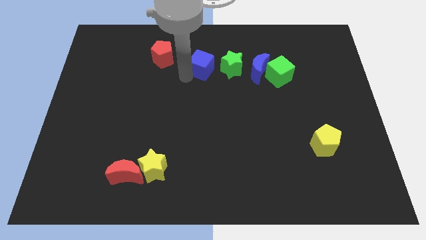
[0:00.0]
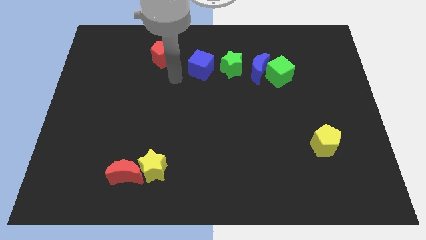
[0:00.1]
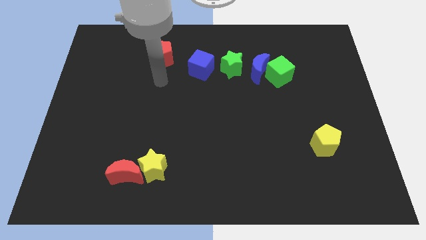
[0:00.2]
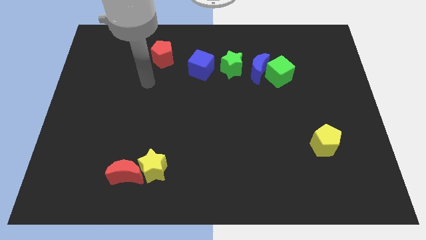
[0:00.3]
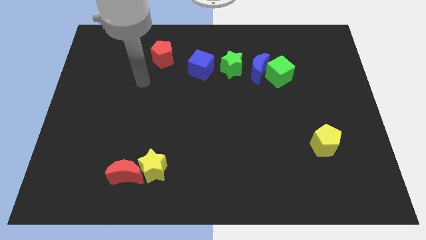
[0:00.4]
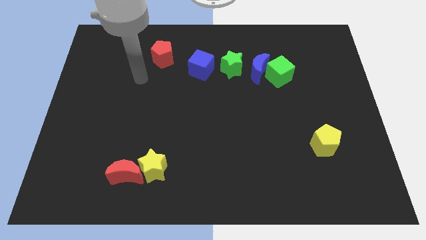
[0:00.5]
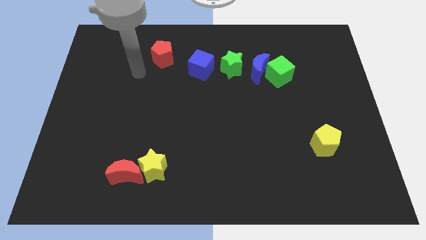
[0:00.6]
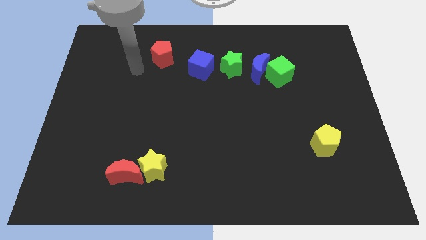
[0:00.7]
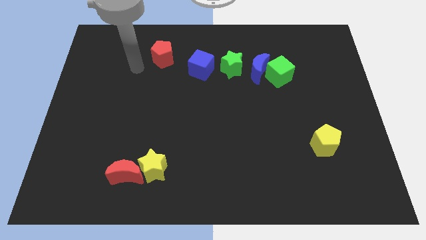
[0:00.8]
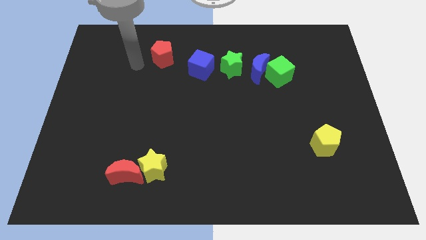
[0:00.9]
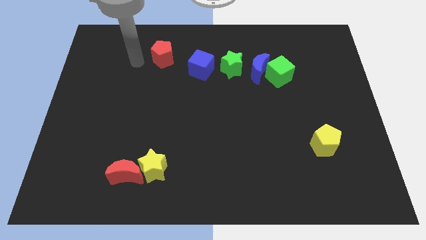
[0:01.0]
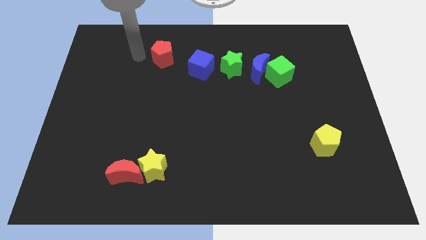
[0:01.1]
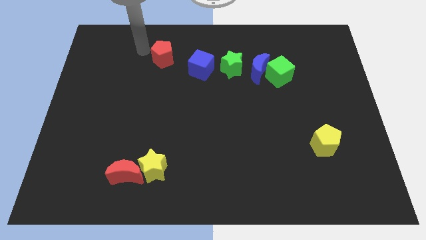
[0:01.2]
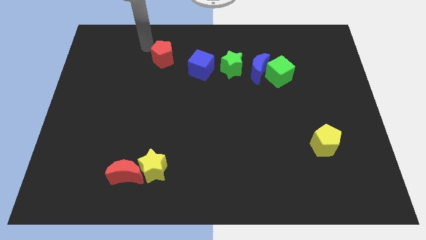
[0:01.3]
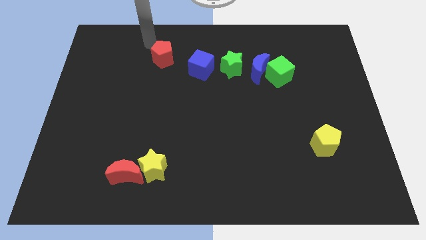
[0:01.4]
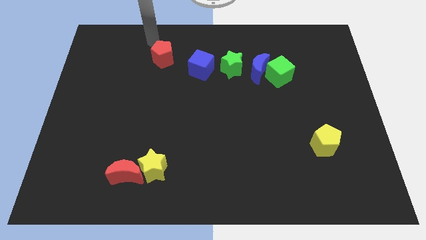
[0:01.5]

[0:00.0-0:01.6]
move your arm away from the blue cube

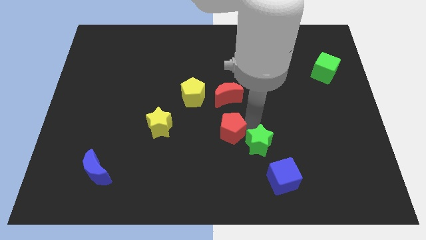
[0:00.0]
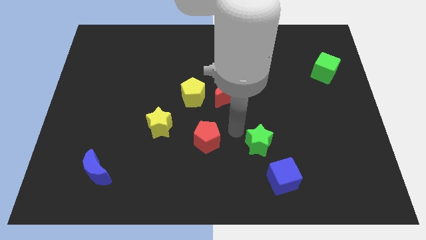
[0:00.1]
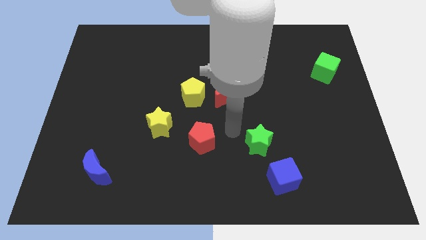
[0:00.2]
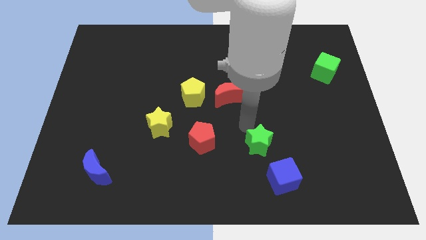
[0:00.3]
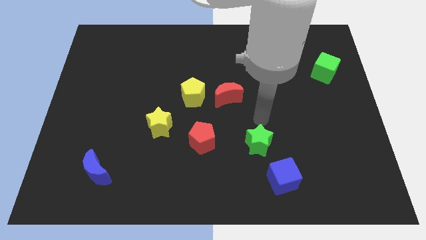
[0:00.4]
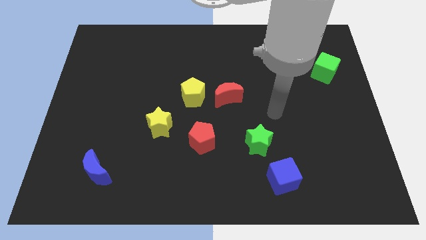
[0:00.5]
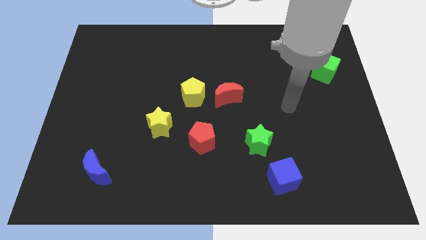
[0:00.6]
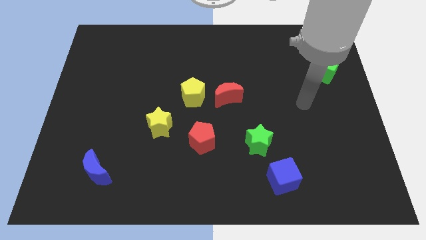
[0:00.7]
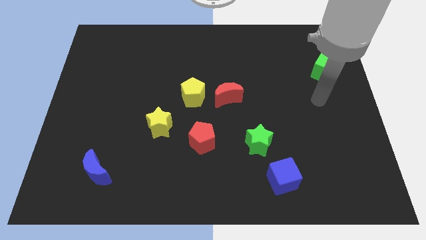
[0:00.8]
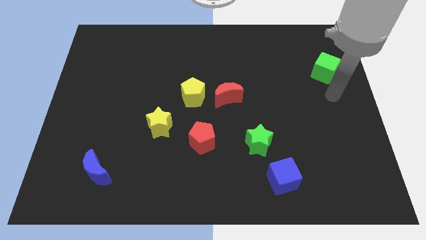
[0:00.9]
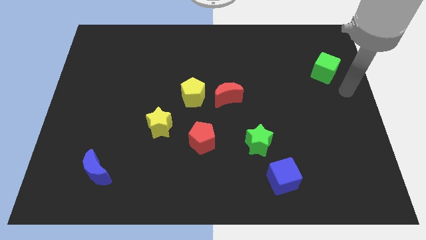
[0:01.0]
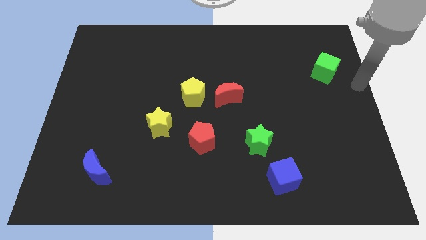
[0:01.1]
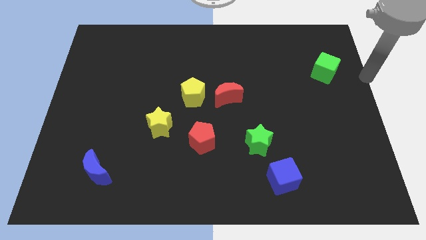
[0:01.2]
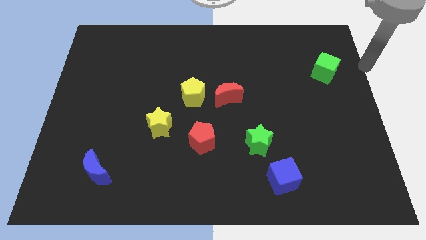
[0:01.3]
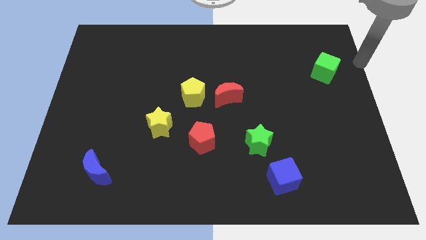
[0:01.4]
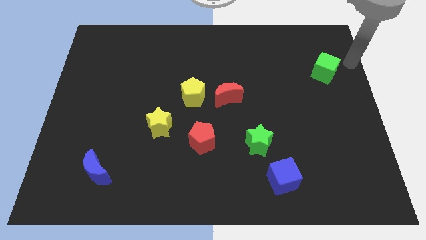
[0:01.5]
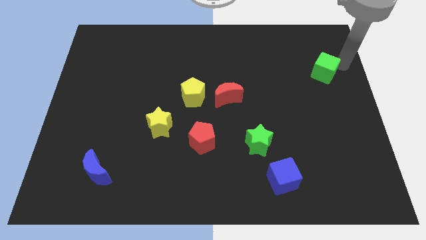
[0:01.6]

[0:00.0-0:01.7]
slide the red pentagon to the left side of the green star

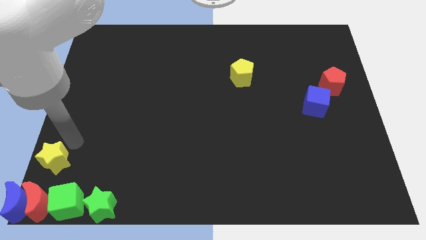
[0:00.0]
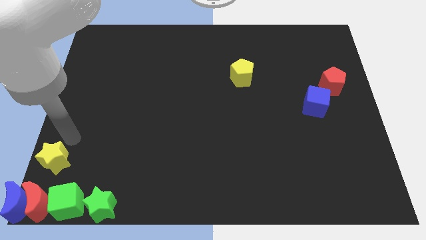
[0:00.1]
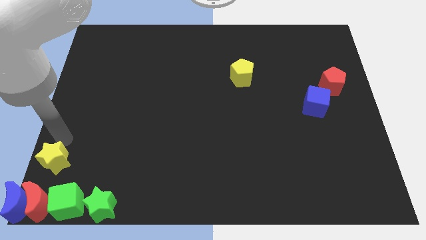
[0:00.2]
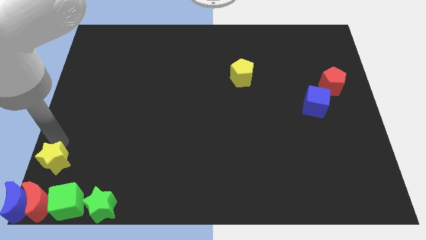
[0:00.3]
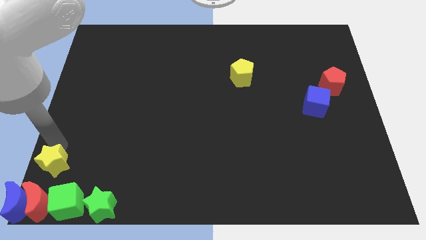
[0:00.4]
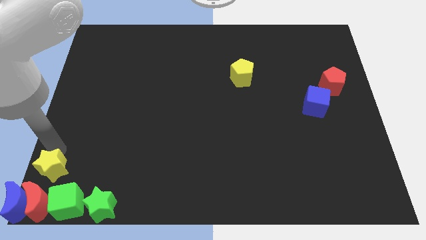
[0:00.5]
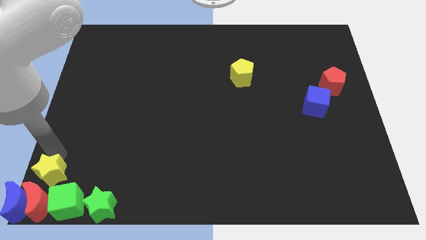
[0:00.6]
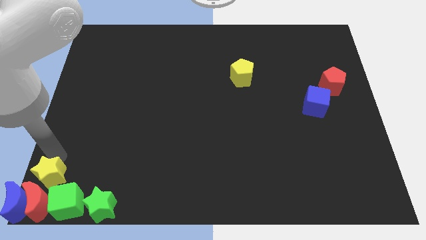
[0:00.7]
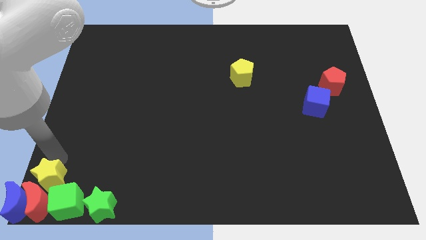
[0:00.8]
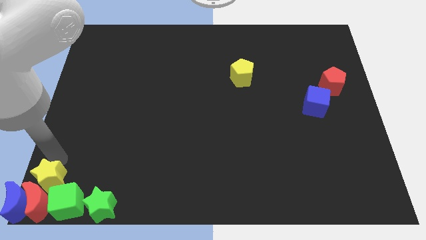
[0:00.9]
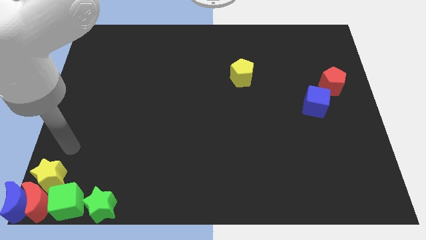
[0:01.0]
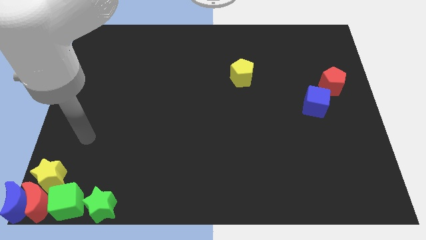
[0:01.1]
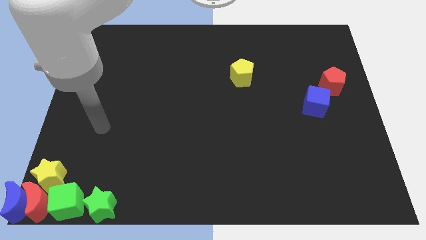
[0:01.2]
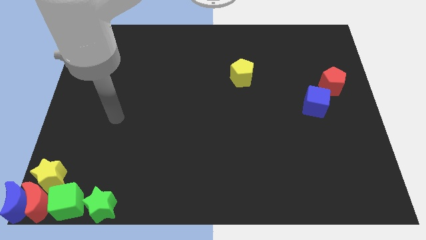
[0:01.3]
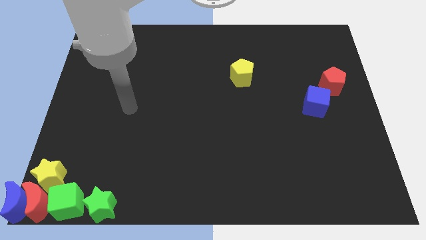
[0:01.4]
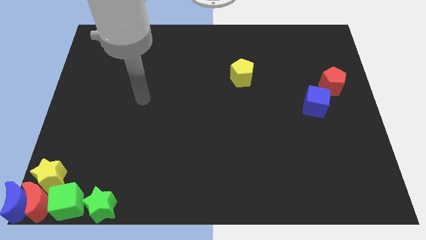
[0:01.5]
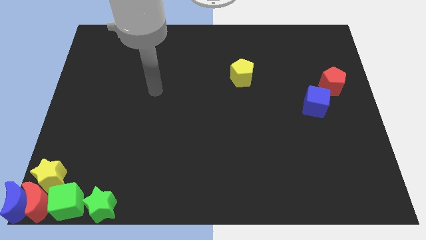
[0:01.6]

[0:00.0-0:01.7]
push the yellow star to the bottom left corner

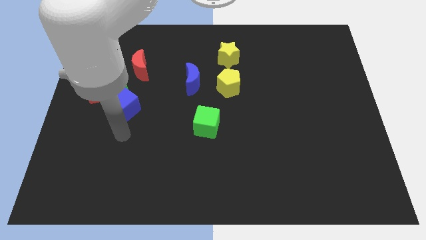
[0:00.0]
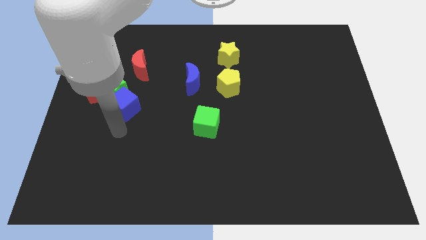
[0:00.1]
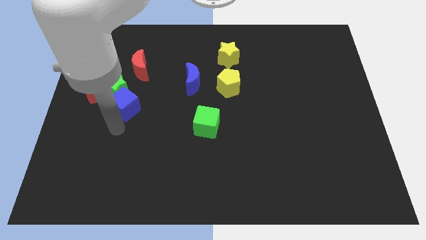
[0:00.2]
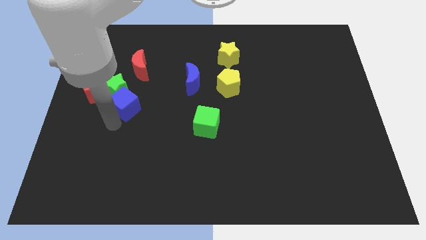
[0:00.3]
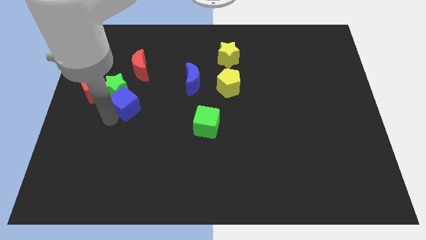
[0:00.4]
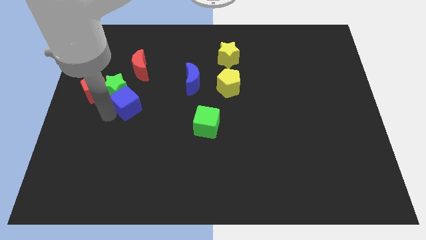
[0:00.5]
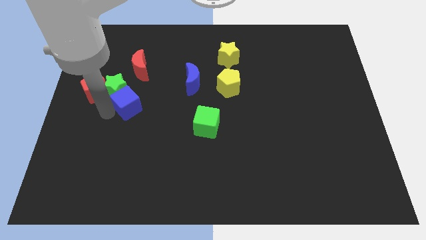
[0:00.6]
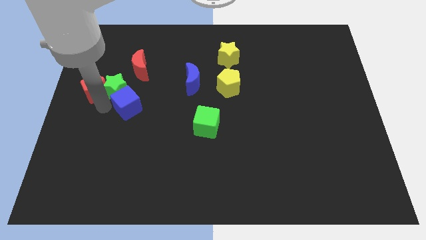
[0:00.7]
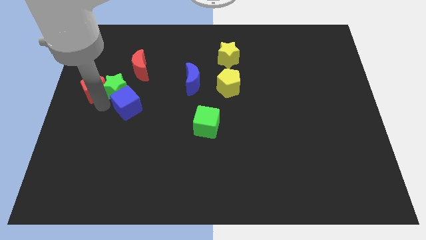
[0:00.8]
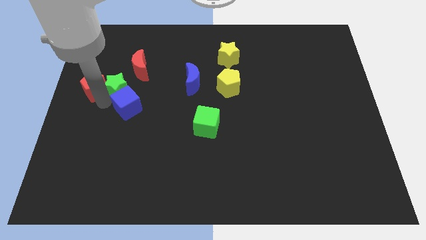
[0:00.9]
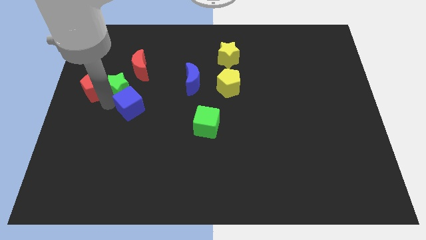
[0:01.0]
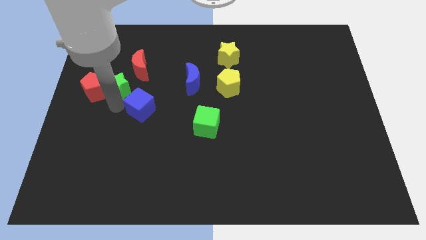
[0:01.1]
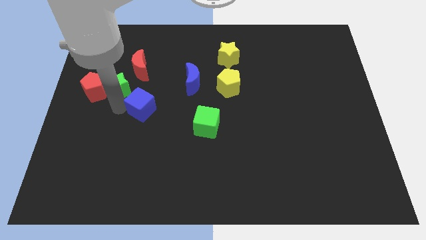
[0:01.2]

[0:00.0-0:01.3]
push blue cube below red crescent

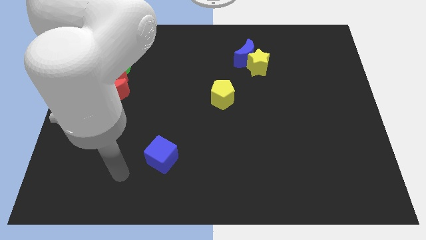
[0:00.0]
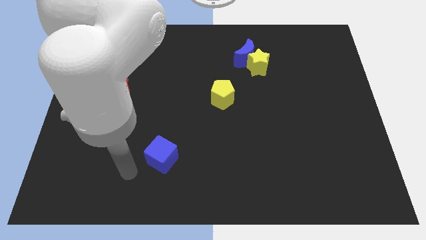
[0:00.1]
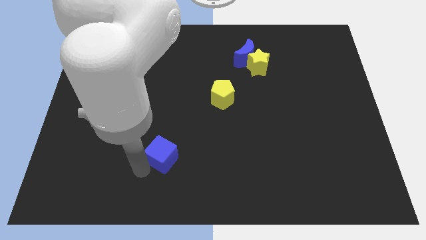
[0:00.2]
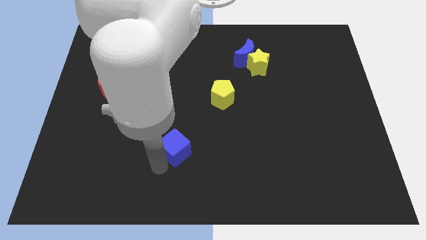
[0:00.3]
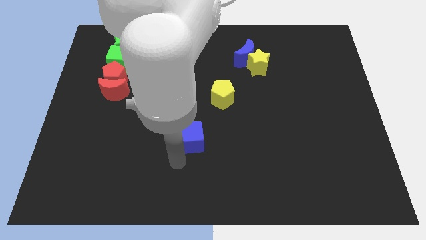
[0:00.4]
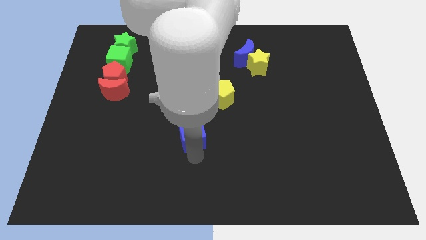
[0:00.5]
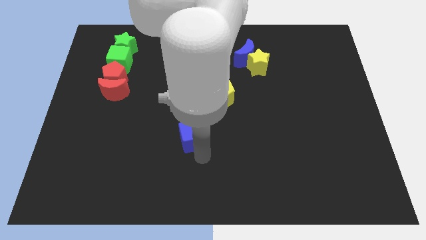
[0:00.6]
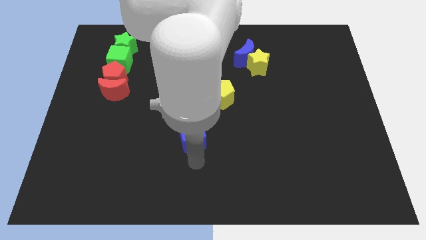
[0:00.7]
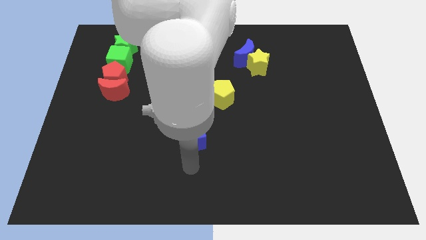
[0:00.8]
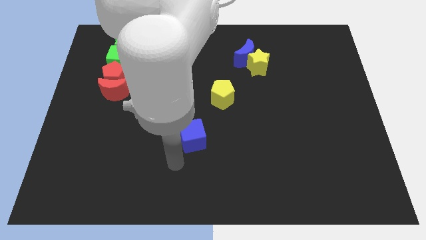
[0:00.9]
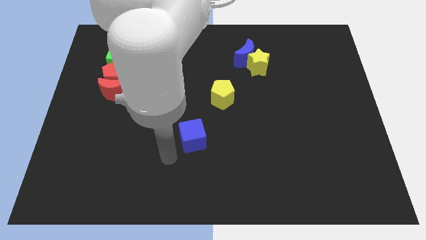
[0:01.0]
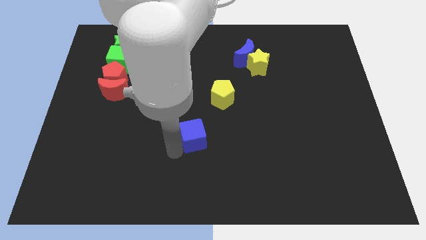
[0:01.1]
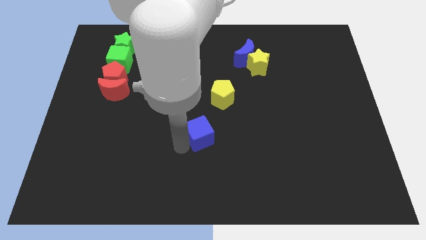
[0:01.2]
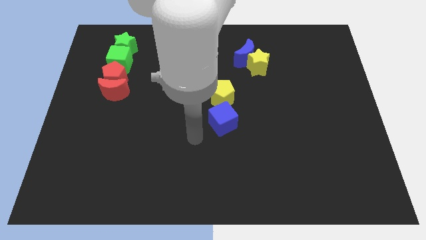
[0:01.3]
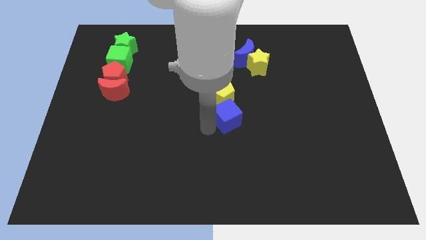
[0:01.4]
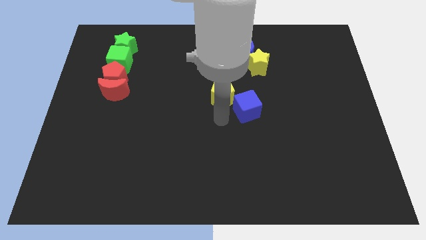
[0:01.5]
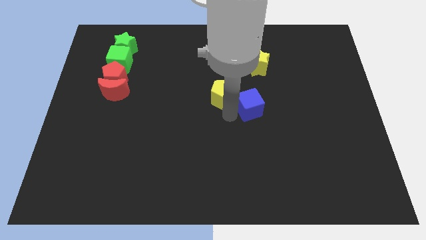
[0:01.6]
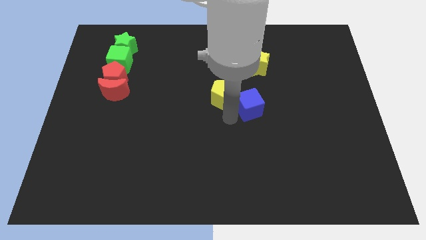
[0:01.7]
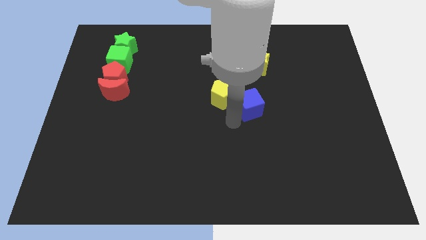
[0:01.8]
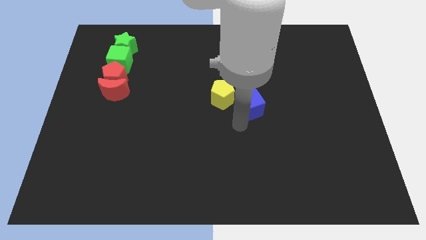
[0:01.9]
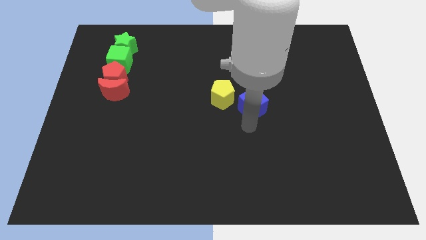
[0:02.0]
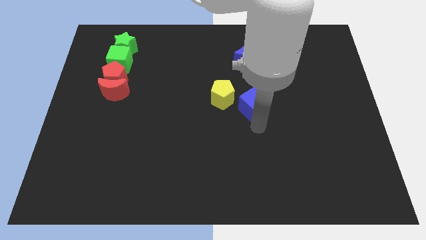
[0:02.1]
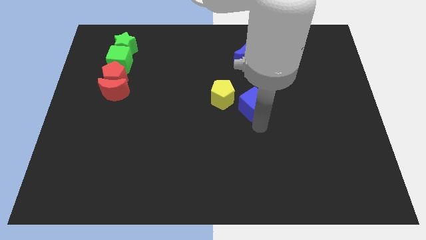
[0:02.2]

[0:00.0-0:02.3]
push the blue cube to the right of the yellow pentagon

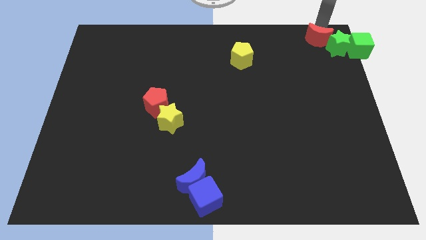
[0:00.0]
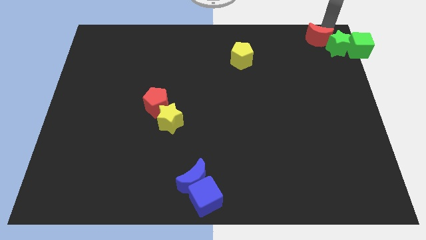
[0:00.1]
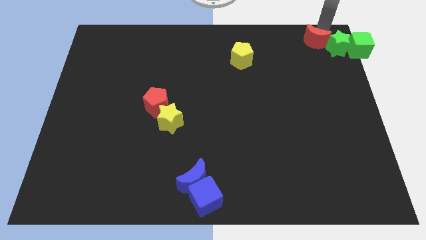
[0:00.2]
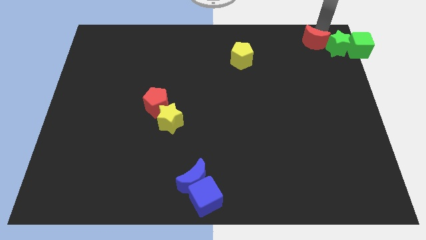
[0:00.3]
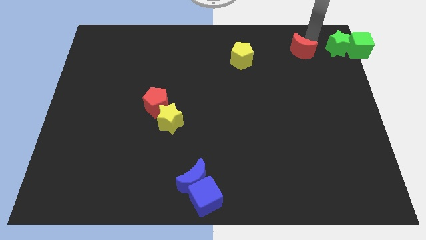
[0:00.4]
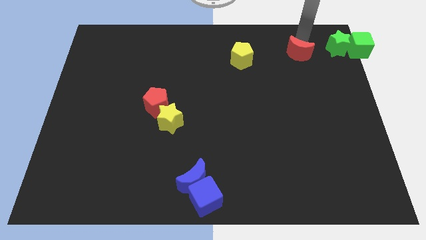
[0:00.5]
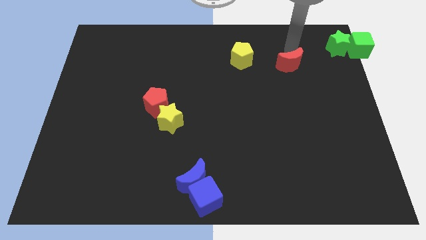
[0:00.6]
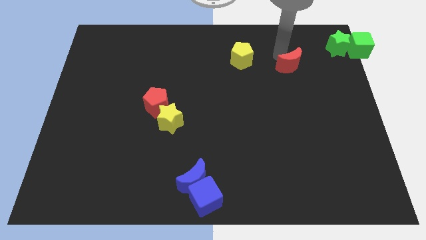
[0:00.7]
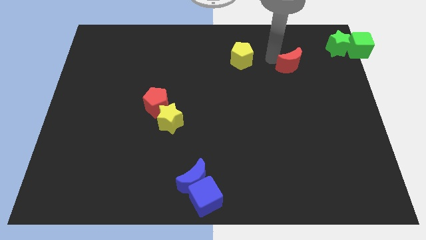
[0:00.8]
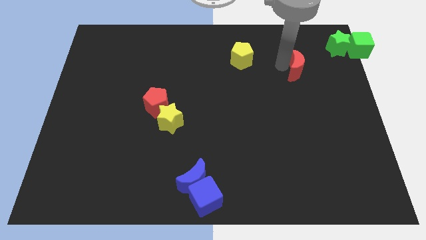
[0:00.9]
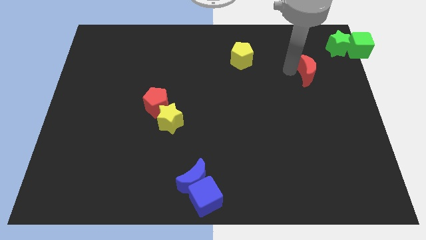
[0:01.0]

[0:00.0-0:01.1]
placethe red crescent right to the yellow star
